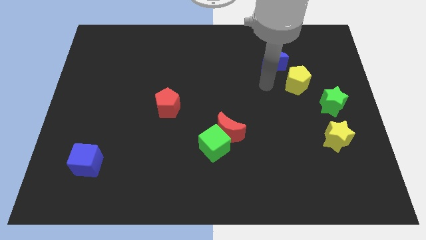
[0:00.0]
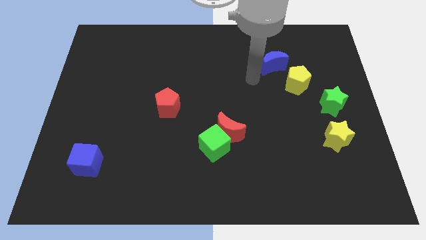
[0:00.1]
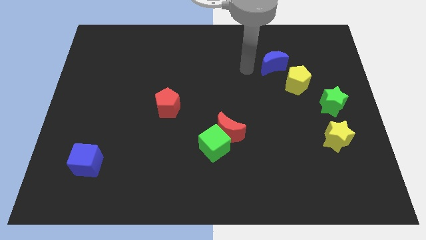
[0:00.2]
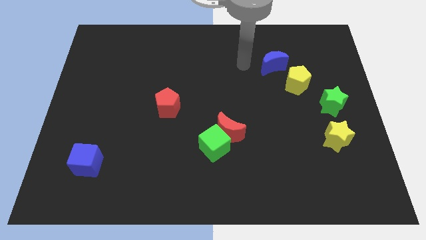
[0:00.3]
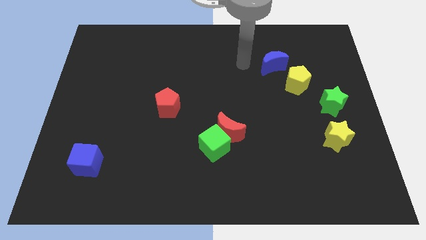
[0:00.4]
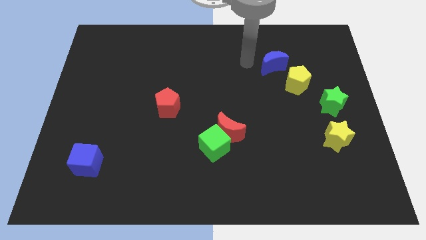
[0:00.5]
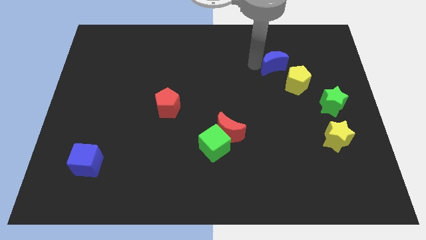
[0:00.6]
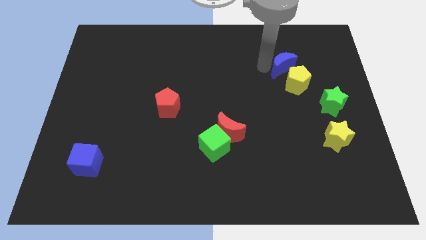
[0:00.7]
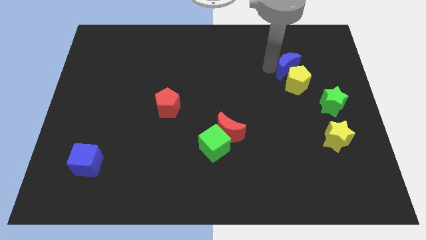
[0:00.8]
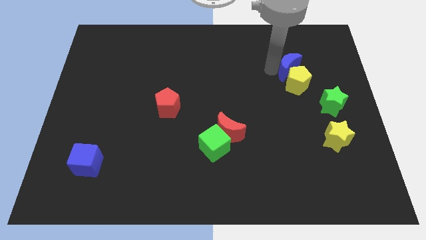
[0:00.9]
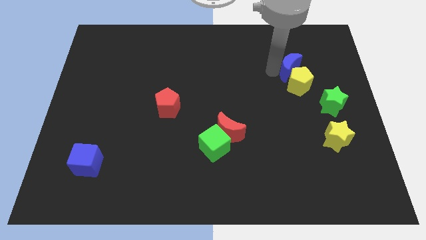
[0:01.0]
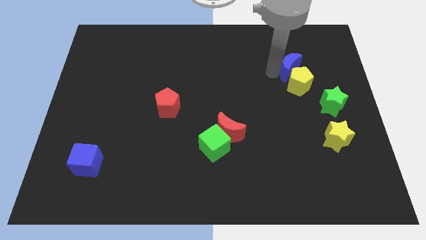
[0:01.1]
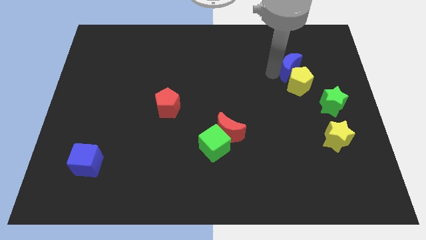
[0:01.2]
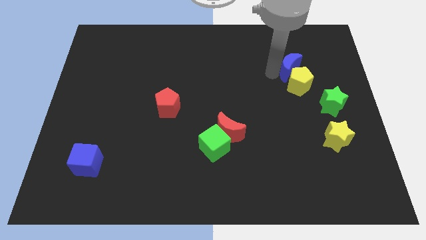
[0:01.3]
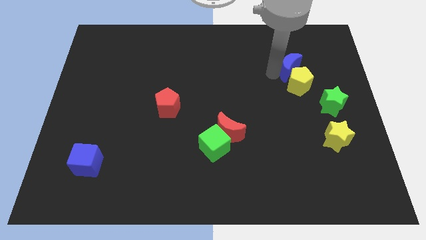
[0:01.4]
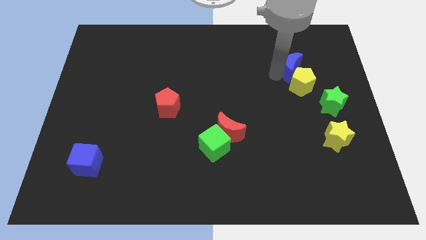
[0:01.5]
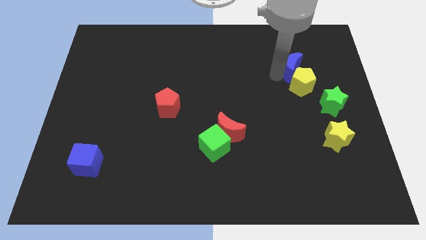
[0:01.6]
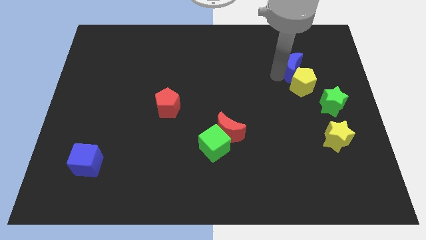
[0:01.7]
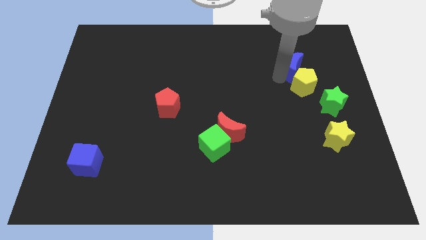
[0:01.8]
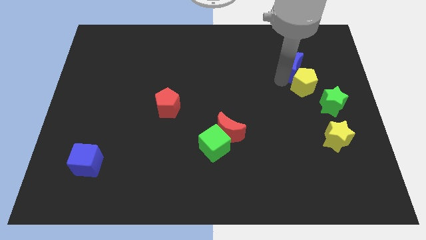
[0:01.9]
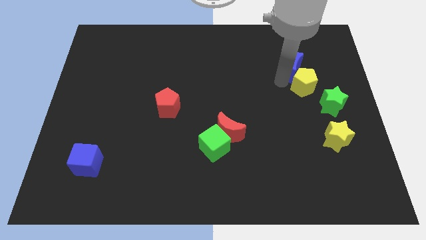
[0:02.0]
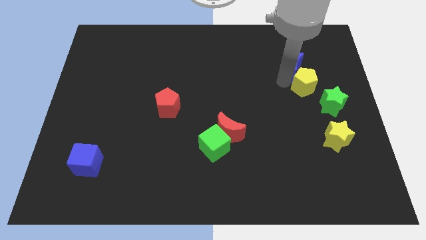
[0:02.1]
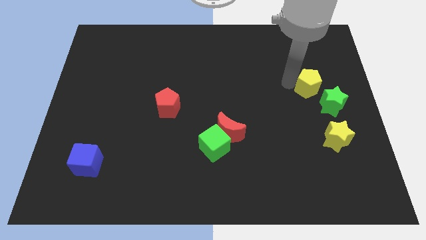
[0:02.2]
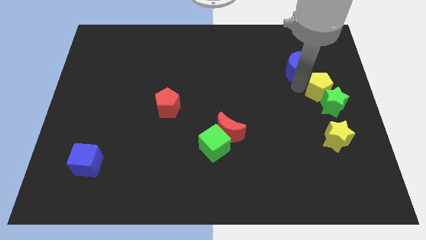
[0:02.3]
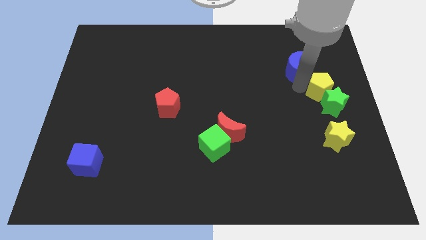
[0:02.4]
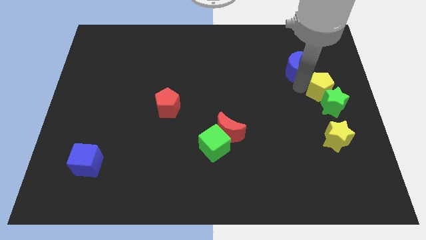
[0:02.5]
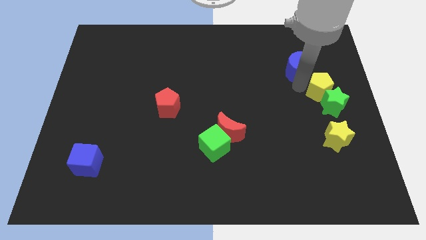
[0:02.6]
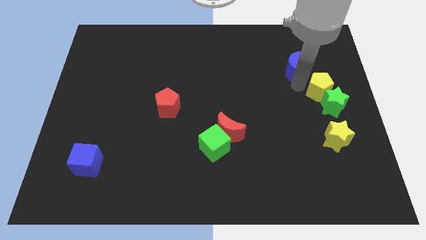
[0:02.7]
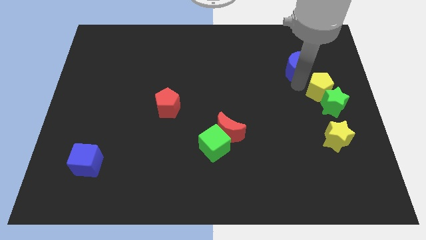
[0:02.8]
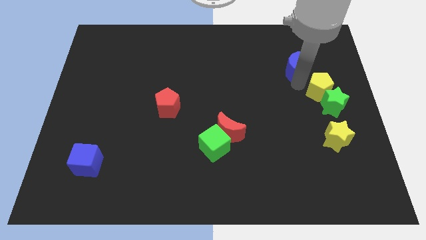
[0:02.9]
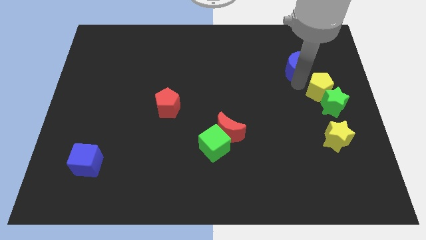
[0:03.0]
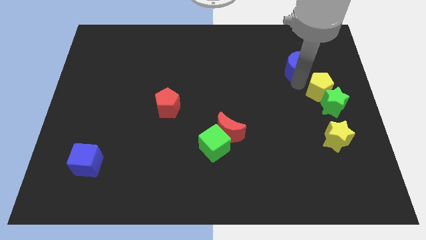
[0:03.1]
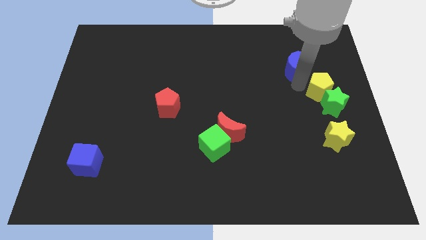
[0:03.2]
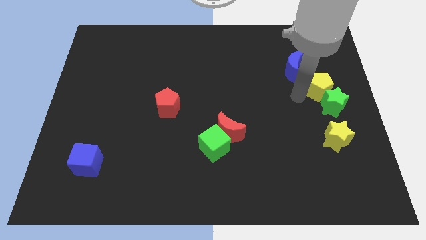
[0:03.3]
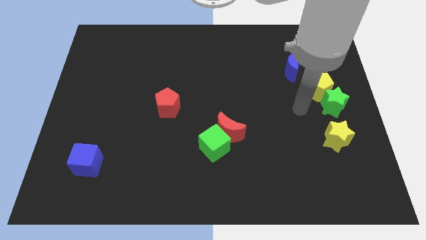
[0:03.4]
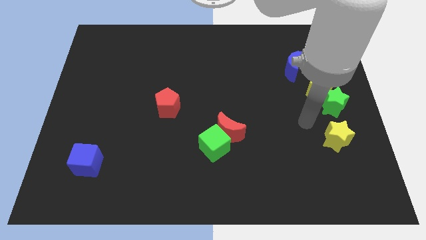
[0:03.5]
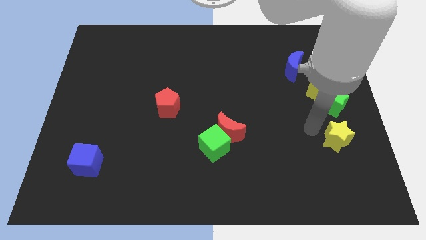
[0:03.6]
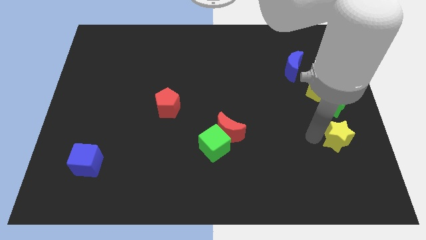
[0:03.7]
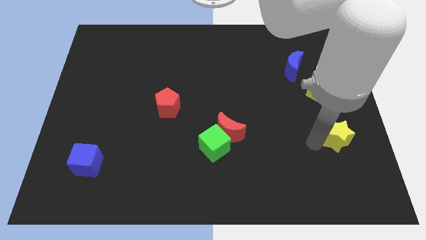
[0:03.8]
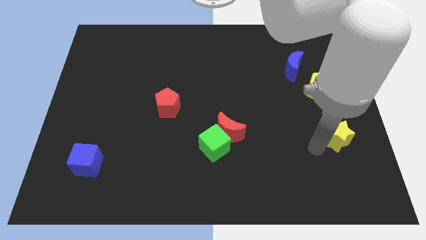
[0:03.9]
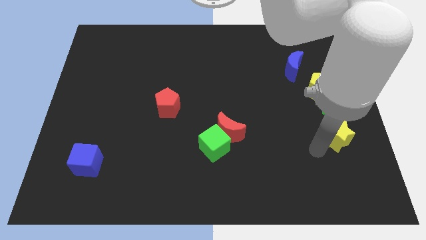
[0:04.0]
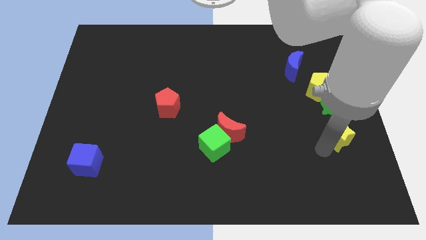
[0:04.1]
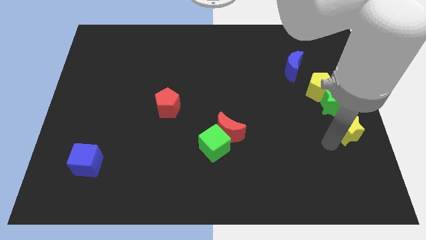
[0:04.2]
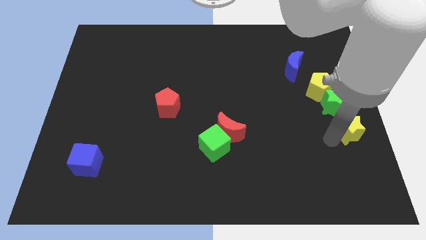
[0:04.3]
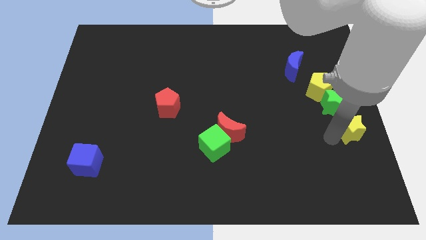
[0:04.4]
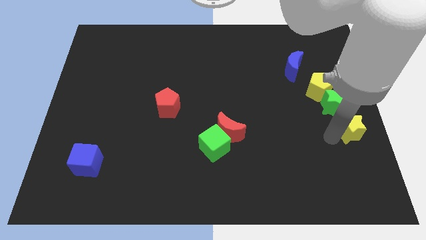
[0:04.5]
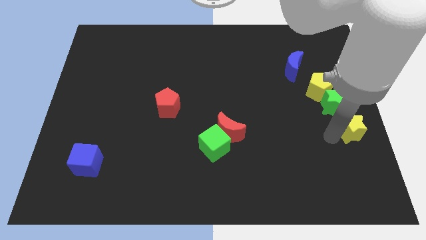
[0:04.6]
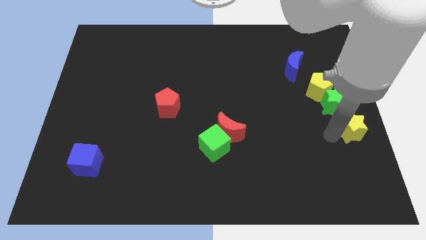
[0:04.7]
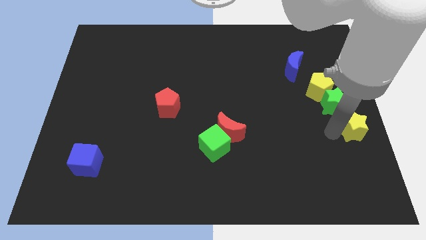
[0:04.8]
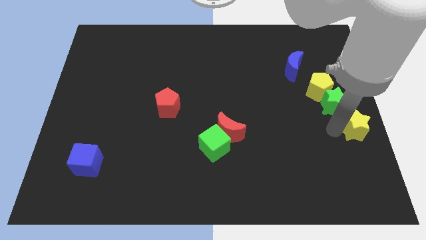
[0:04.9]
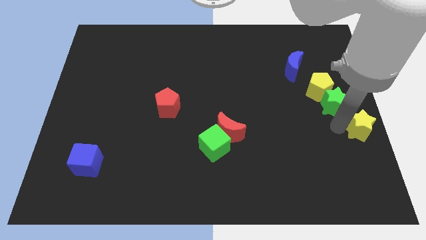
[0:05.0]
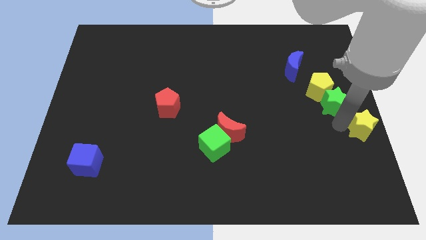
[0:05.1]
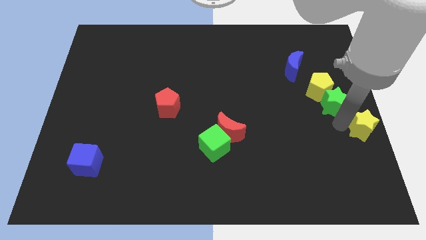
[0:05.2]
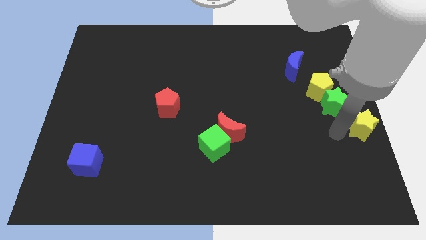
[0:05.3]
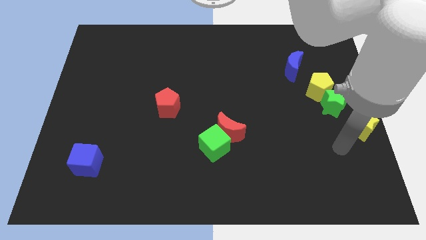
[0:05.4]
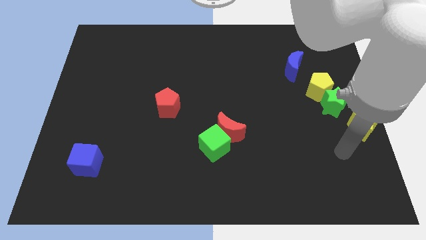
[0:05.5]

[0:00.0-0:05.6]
arrange a group of blocks in a line

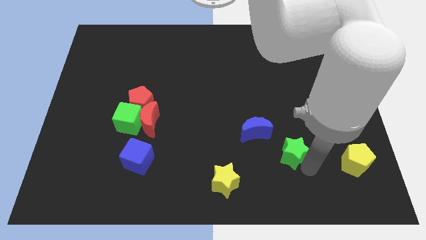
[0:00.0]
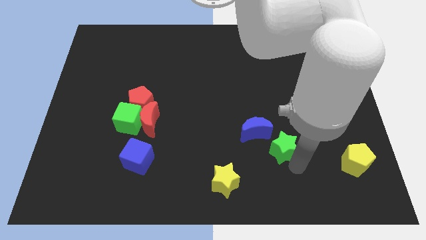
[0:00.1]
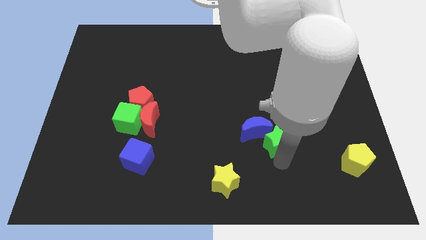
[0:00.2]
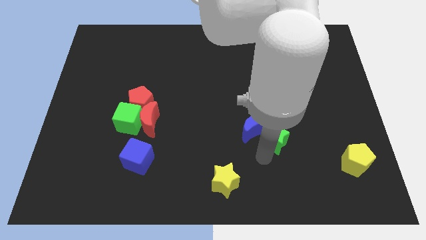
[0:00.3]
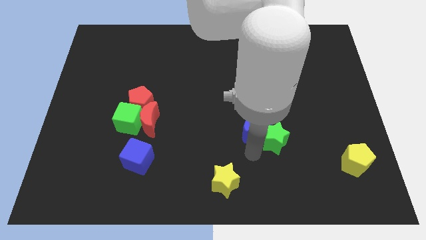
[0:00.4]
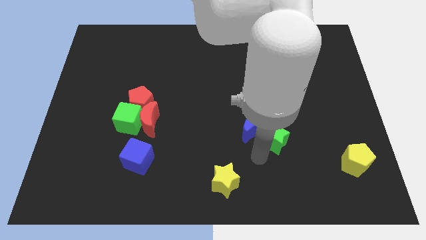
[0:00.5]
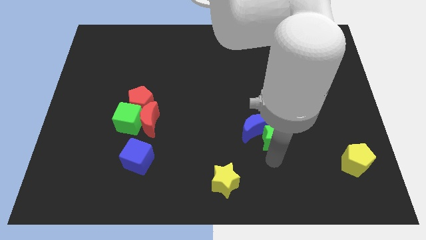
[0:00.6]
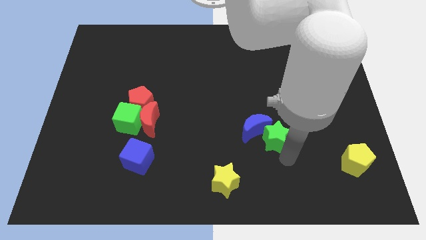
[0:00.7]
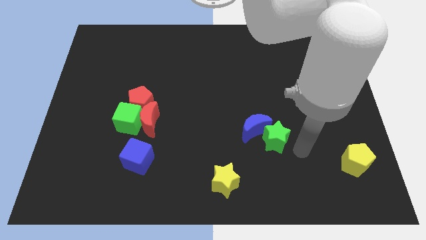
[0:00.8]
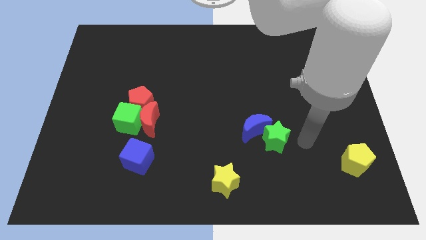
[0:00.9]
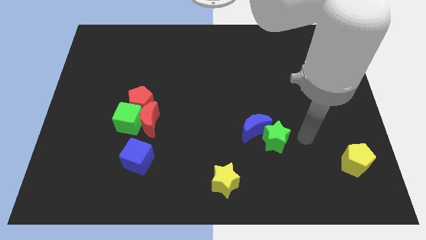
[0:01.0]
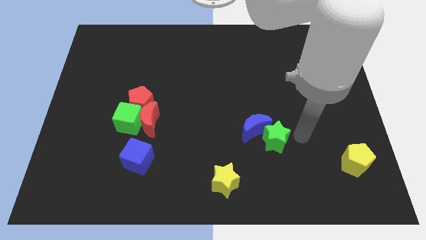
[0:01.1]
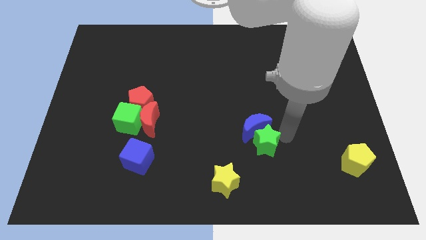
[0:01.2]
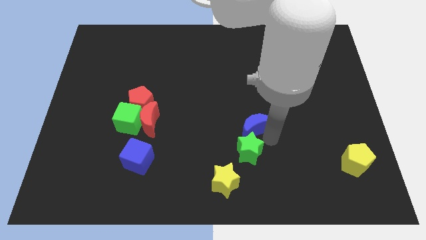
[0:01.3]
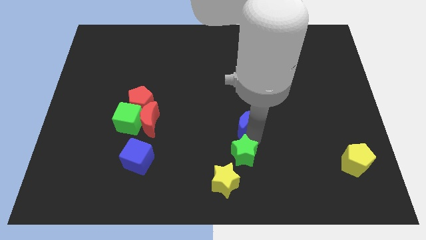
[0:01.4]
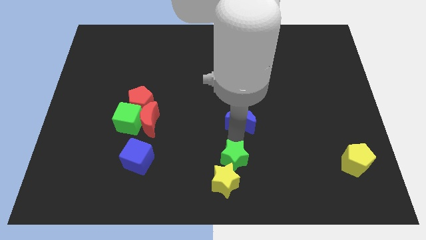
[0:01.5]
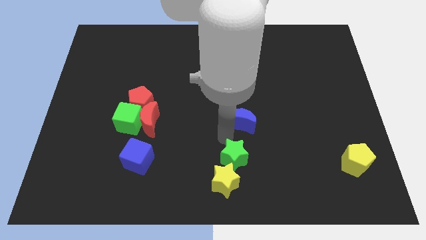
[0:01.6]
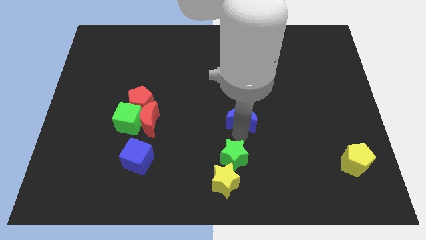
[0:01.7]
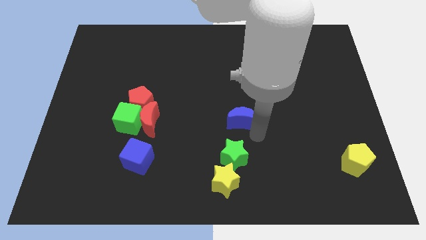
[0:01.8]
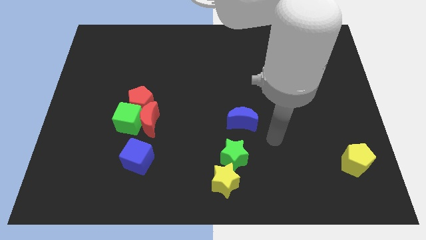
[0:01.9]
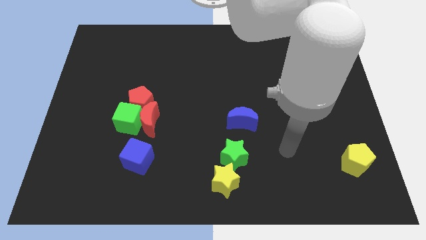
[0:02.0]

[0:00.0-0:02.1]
place green star above the yellow star

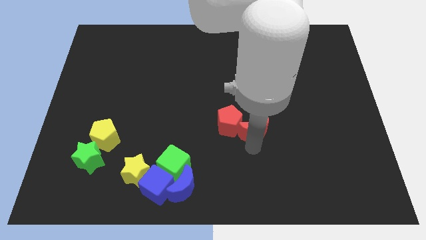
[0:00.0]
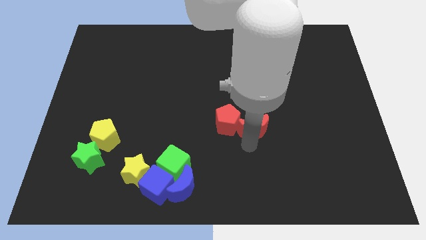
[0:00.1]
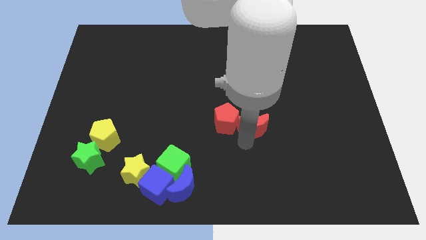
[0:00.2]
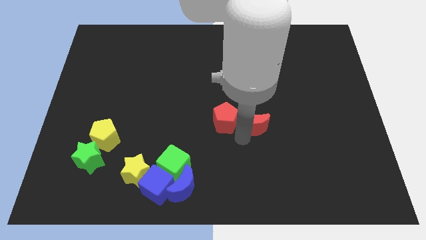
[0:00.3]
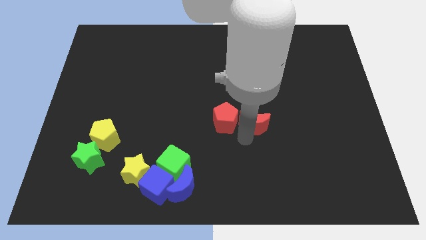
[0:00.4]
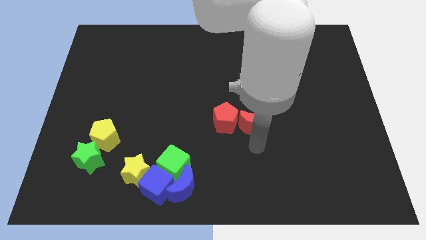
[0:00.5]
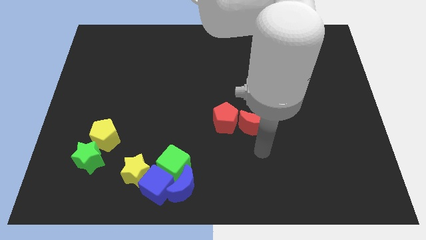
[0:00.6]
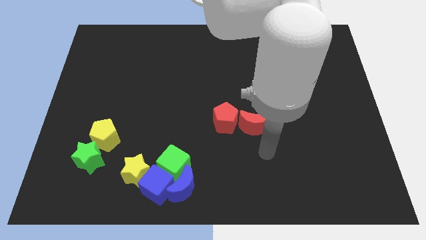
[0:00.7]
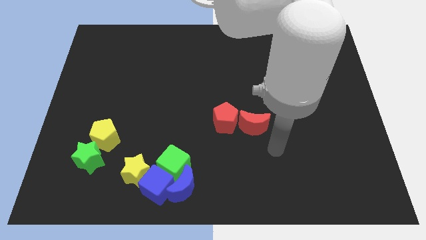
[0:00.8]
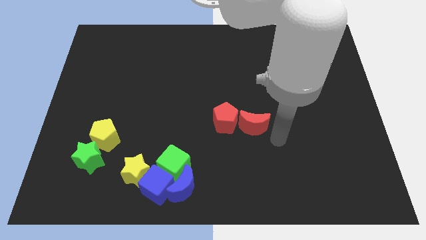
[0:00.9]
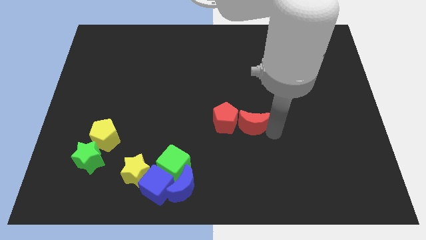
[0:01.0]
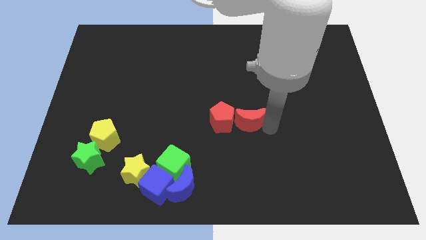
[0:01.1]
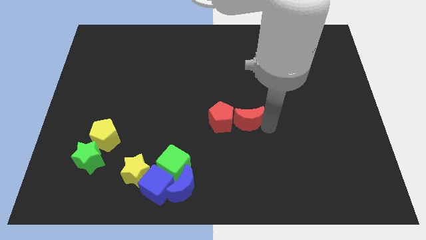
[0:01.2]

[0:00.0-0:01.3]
push the red crescent right to the red pentagon
